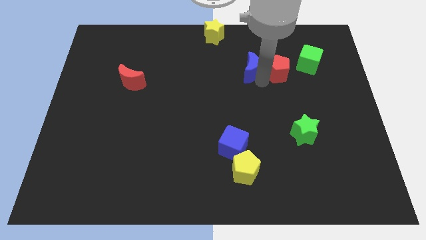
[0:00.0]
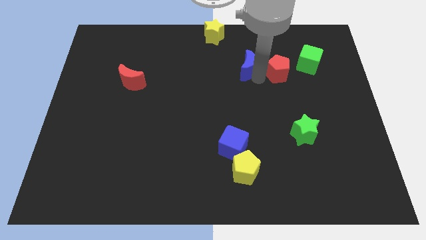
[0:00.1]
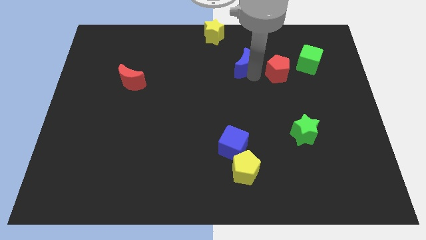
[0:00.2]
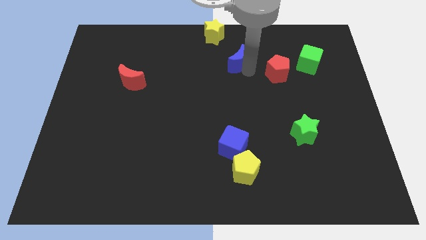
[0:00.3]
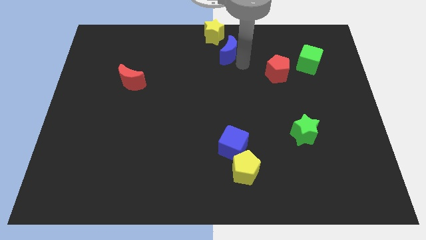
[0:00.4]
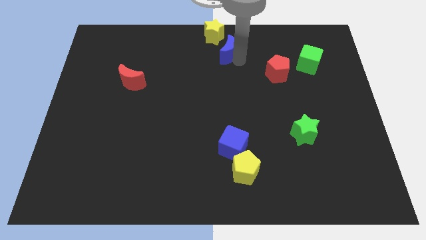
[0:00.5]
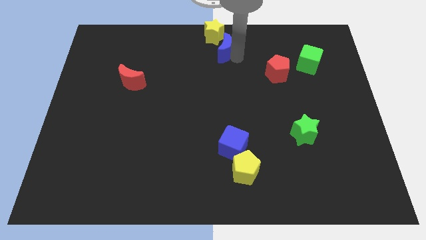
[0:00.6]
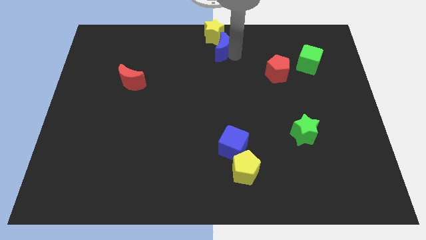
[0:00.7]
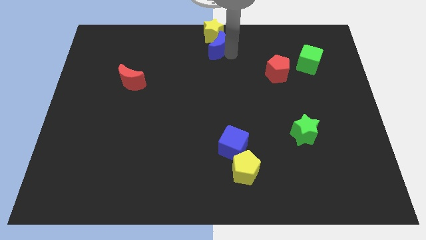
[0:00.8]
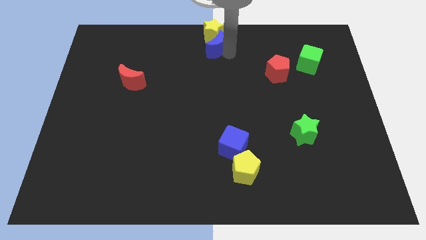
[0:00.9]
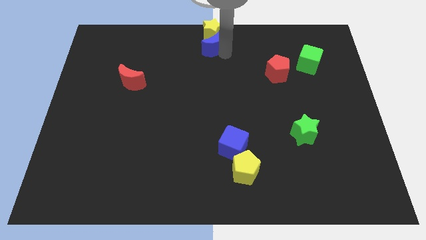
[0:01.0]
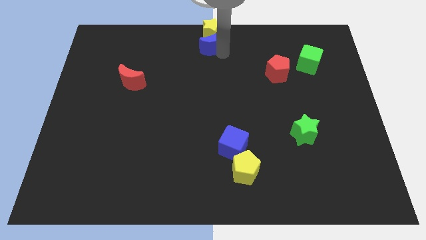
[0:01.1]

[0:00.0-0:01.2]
slide the blue moon into the yellow star

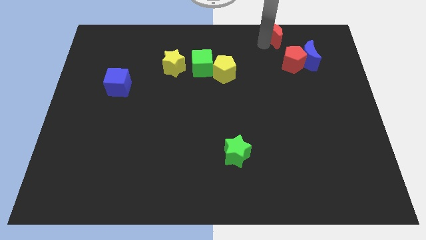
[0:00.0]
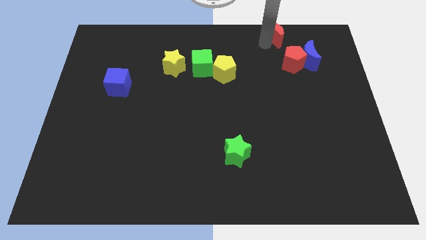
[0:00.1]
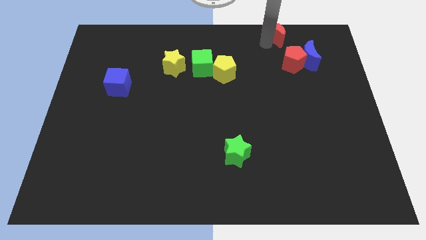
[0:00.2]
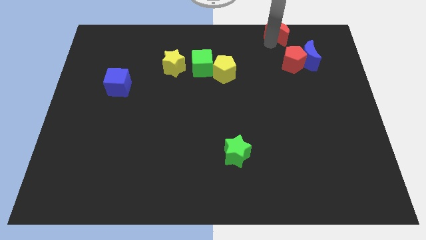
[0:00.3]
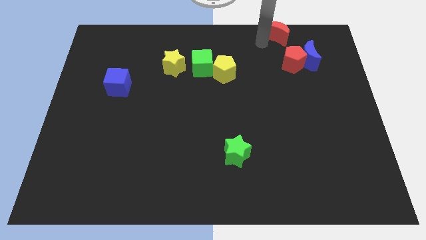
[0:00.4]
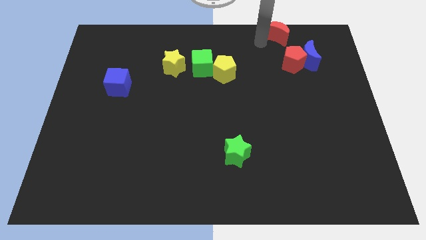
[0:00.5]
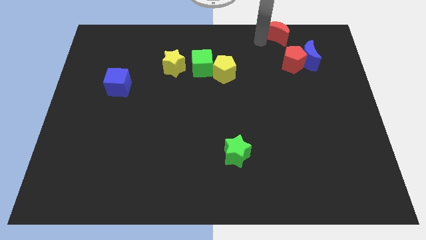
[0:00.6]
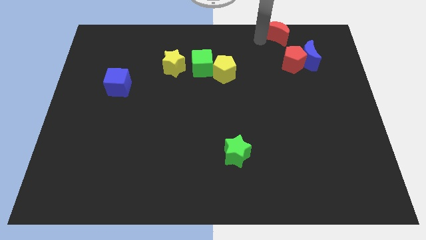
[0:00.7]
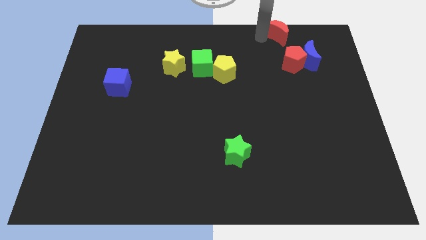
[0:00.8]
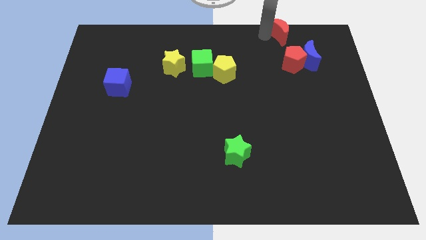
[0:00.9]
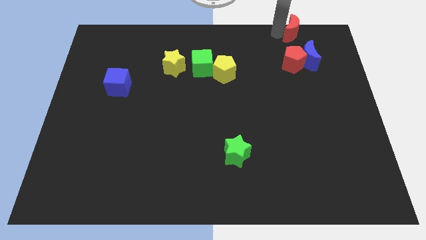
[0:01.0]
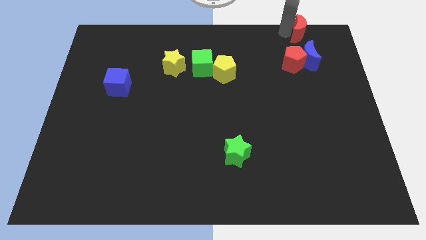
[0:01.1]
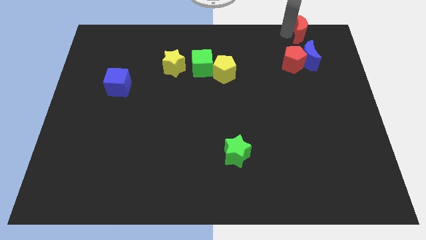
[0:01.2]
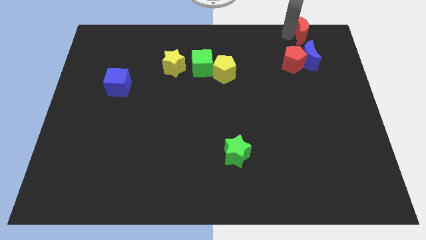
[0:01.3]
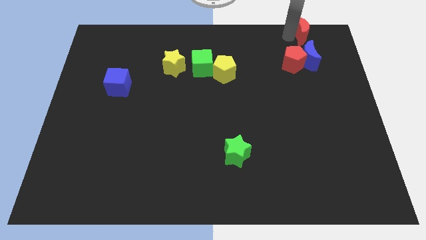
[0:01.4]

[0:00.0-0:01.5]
place the red crescent above the blue crescent

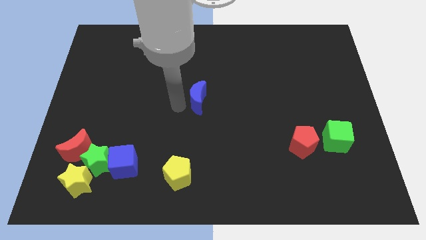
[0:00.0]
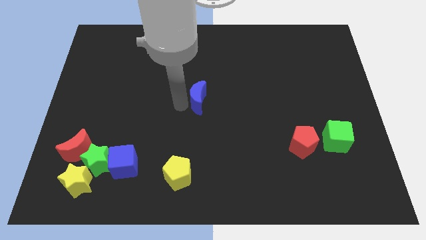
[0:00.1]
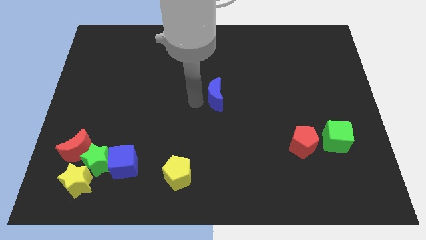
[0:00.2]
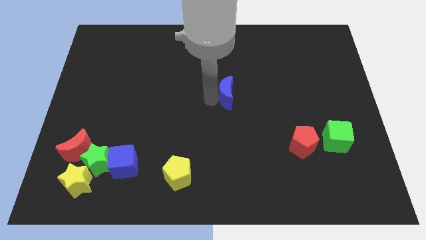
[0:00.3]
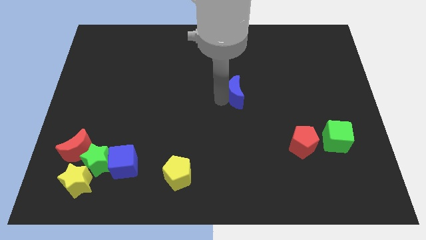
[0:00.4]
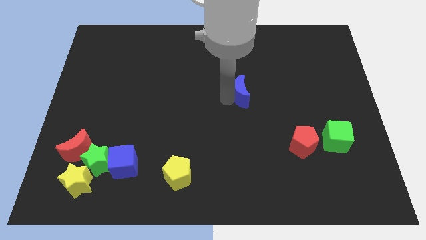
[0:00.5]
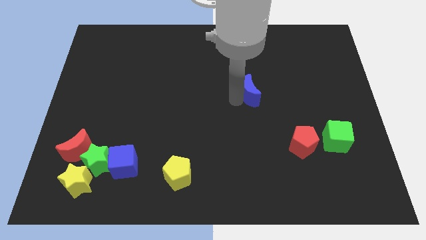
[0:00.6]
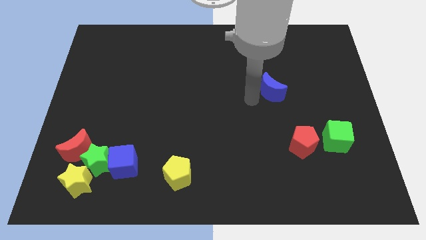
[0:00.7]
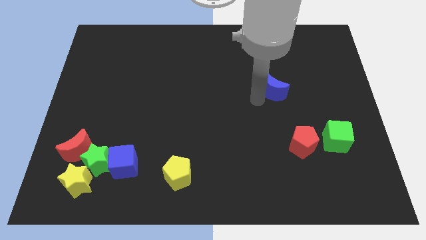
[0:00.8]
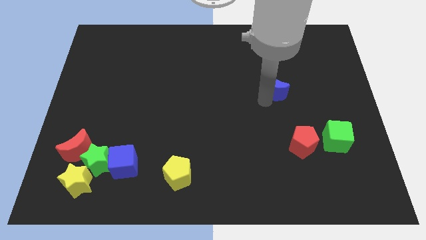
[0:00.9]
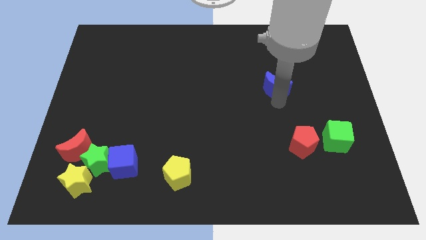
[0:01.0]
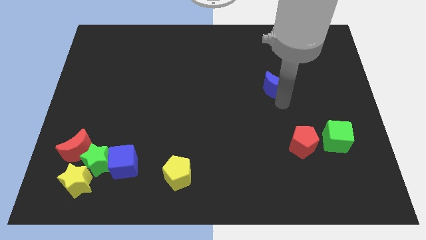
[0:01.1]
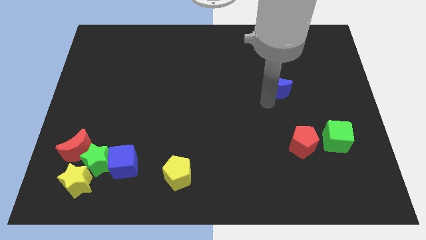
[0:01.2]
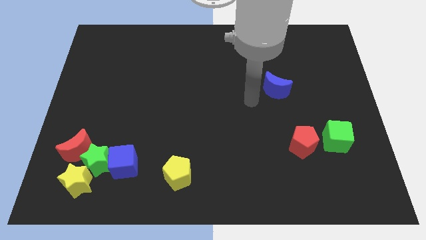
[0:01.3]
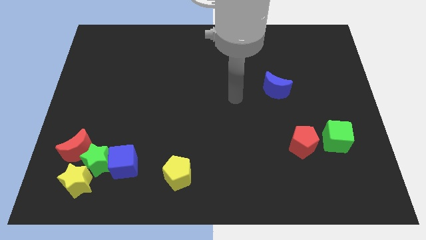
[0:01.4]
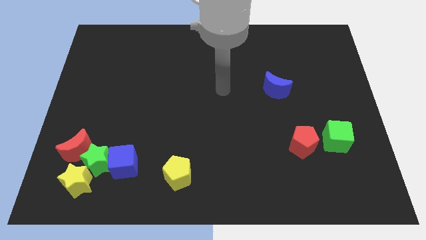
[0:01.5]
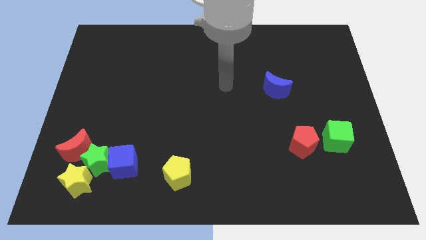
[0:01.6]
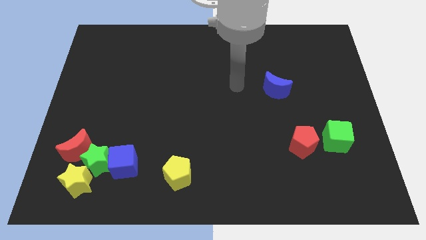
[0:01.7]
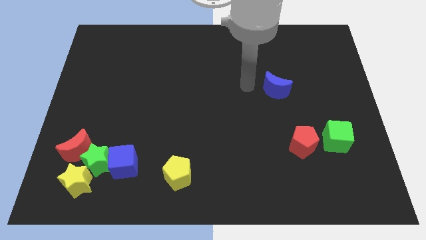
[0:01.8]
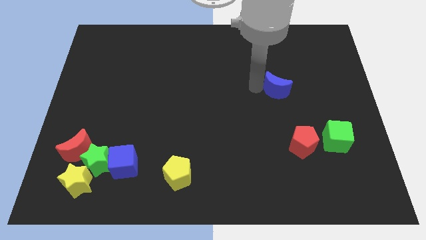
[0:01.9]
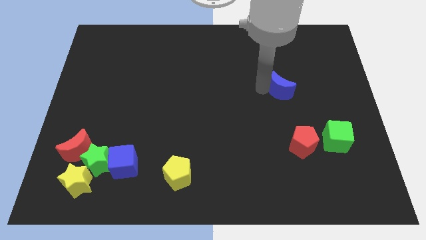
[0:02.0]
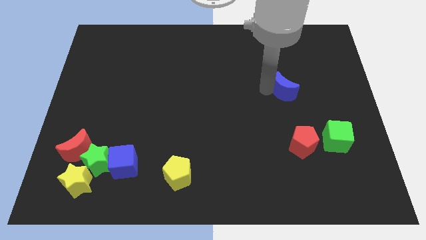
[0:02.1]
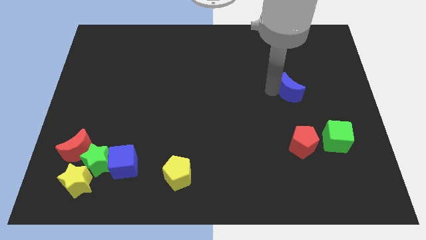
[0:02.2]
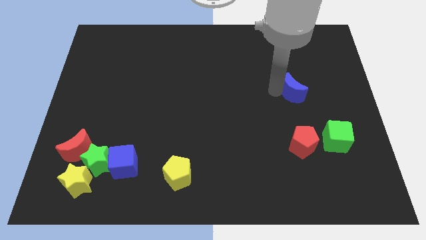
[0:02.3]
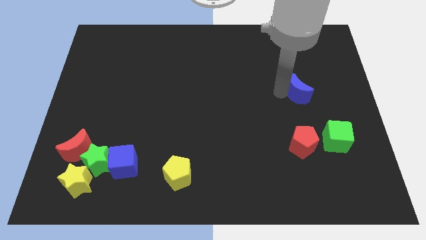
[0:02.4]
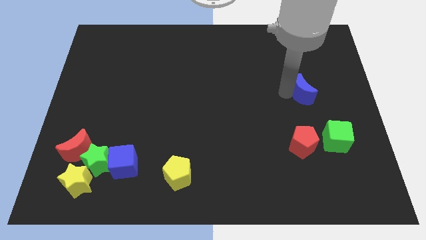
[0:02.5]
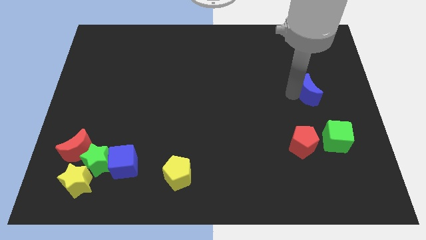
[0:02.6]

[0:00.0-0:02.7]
move blue moon above the red pentagon

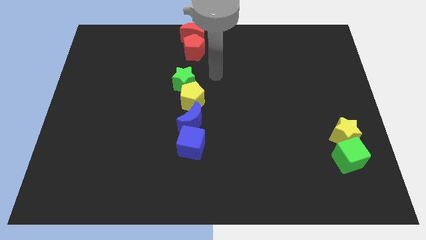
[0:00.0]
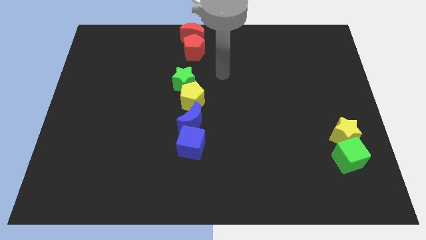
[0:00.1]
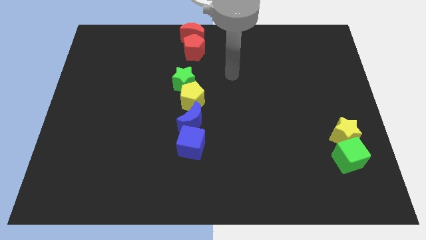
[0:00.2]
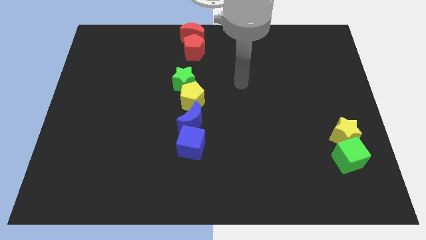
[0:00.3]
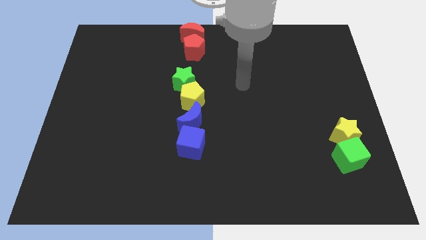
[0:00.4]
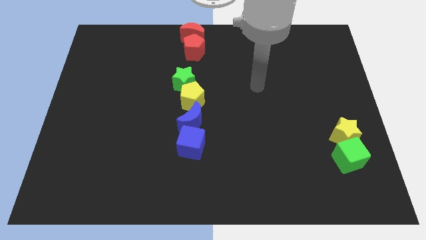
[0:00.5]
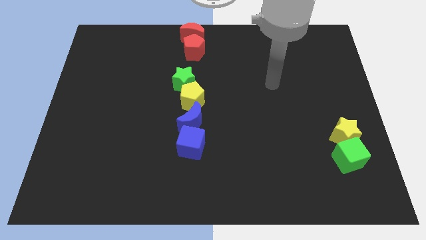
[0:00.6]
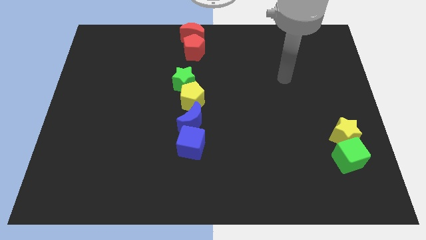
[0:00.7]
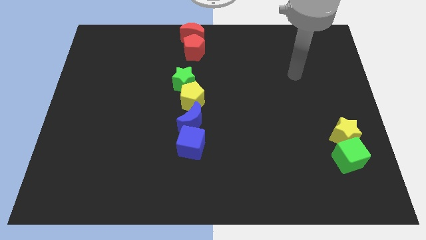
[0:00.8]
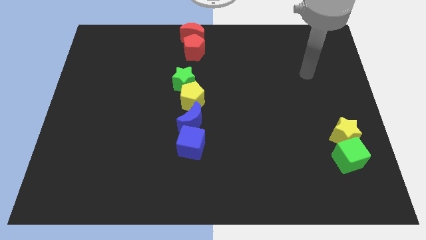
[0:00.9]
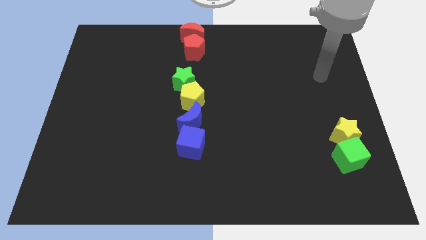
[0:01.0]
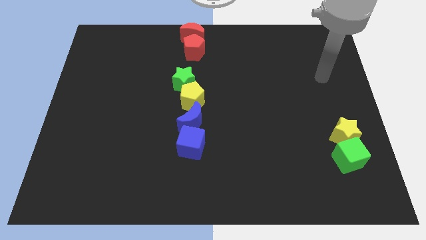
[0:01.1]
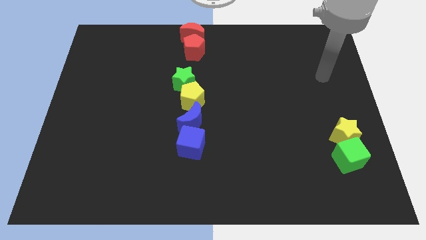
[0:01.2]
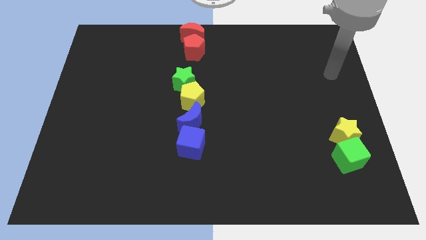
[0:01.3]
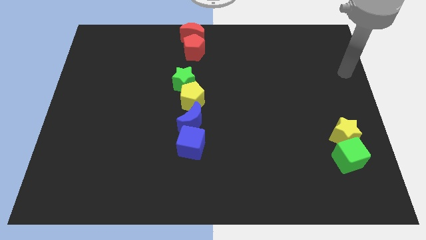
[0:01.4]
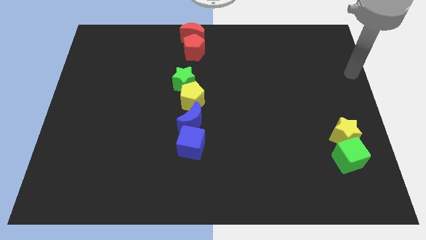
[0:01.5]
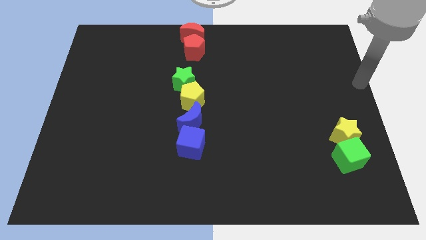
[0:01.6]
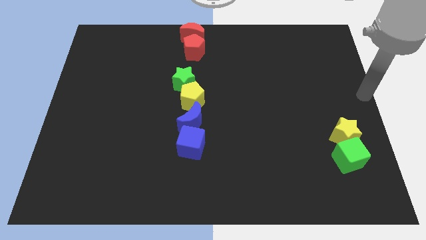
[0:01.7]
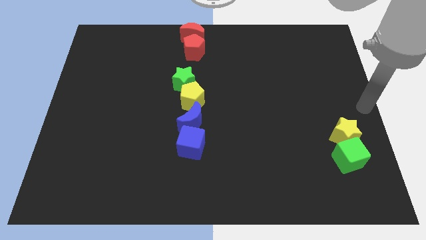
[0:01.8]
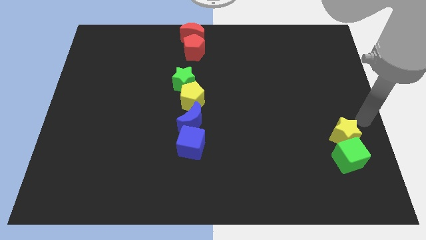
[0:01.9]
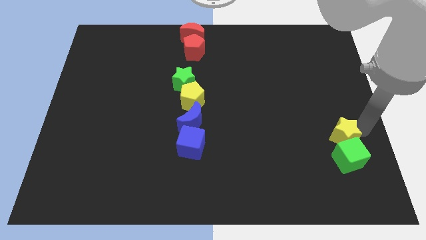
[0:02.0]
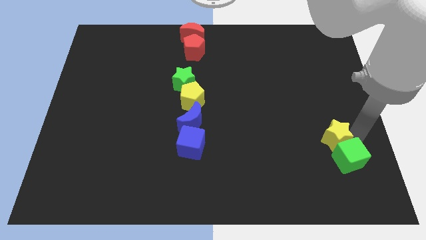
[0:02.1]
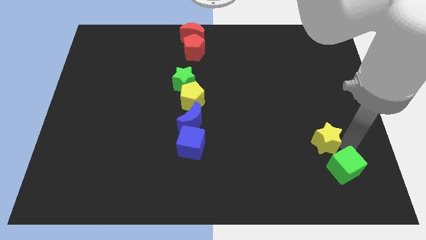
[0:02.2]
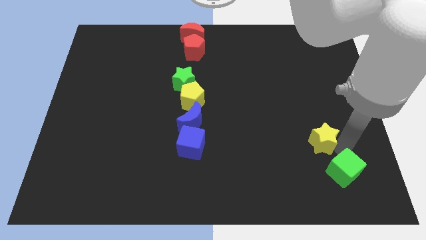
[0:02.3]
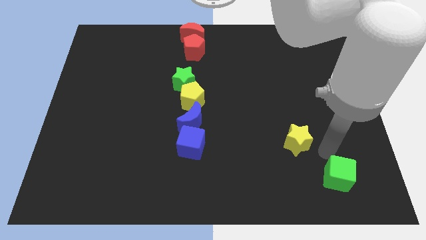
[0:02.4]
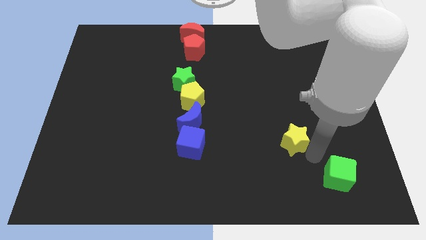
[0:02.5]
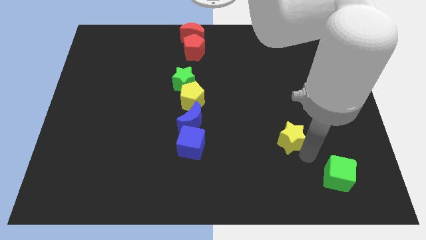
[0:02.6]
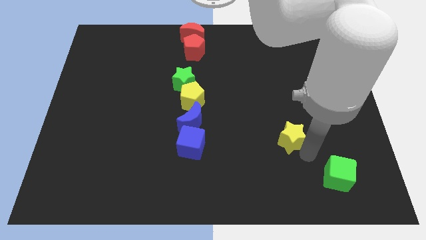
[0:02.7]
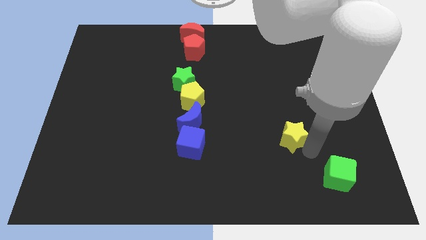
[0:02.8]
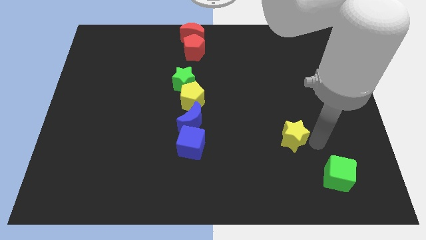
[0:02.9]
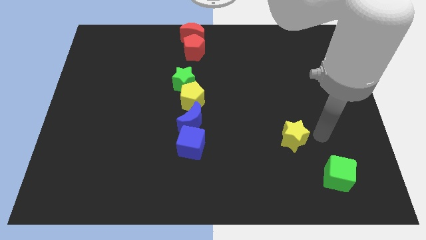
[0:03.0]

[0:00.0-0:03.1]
separate yellow star and green cube from each other

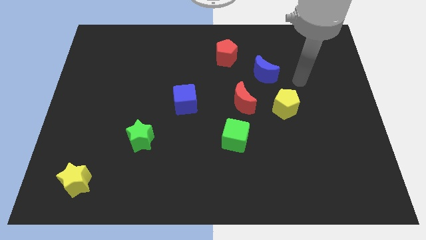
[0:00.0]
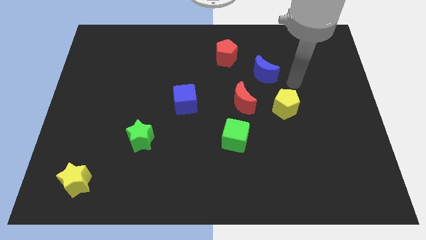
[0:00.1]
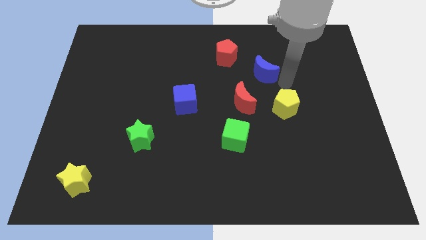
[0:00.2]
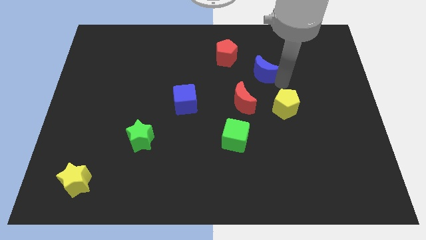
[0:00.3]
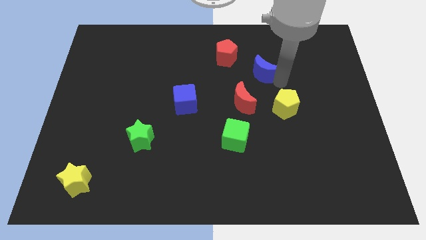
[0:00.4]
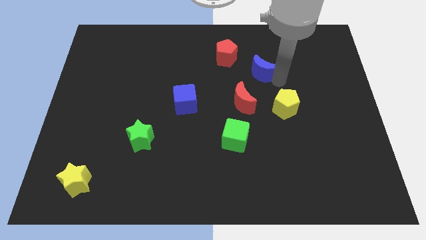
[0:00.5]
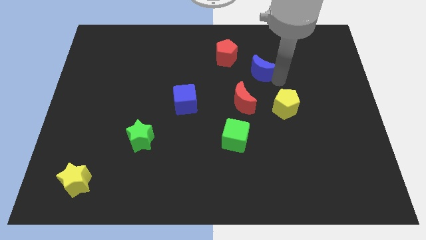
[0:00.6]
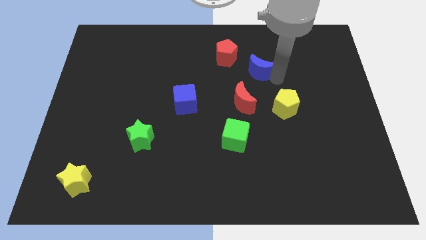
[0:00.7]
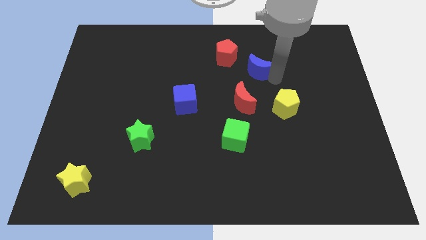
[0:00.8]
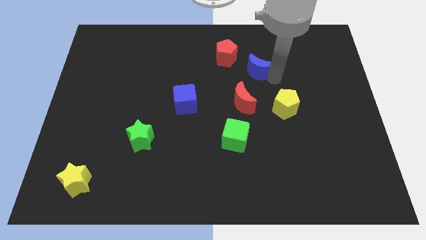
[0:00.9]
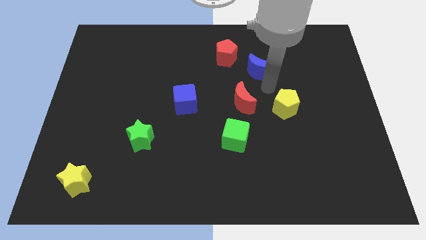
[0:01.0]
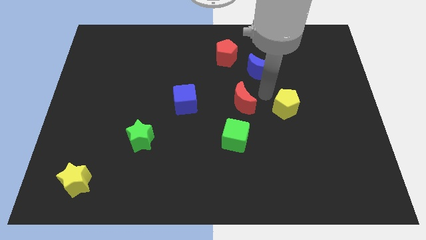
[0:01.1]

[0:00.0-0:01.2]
slightly move the blue crescent towards left side of red pentagon
